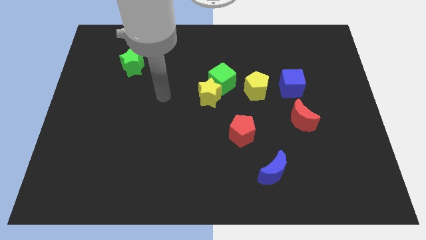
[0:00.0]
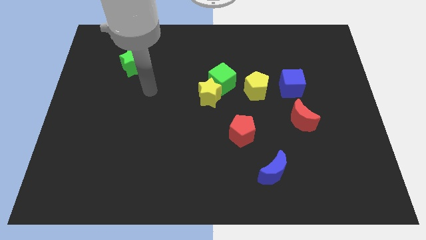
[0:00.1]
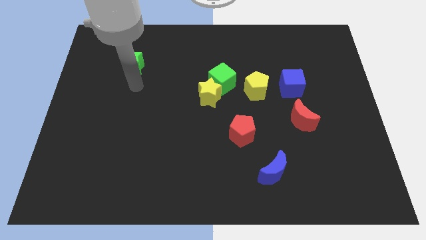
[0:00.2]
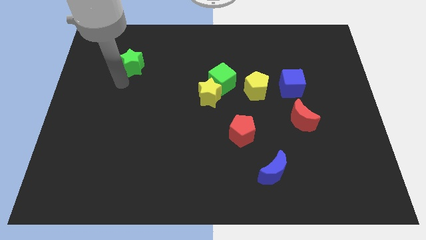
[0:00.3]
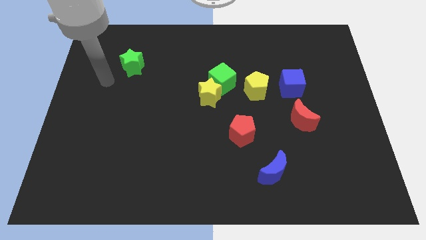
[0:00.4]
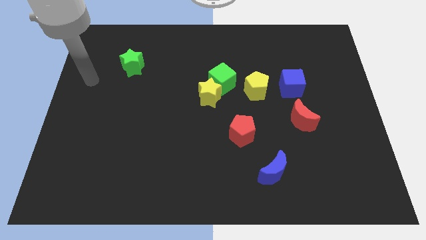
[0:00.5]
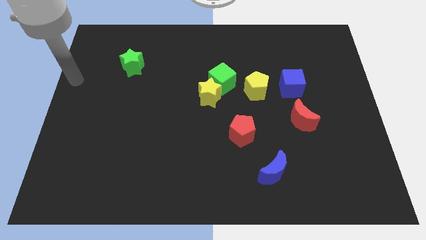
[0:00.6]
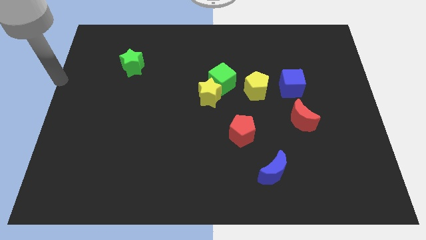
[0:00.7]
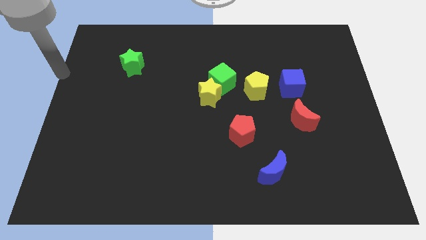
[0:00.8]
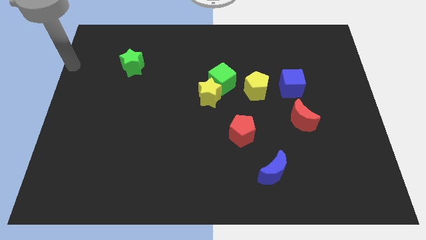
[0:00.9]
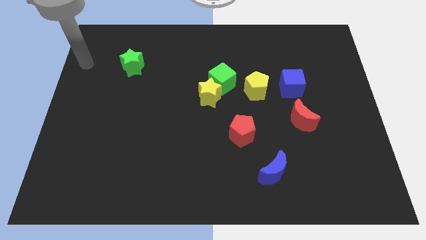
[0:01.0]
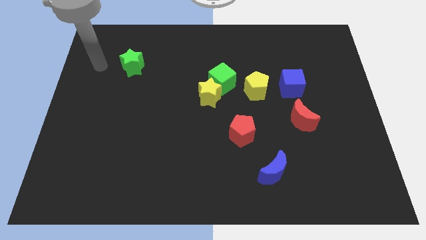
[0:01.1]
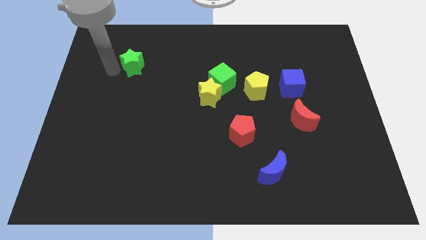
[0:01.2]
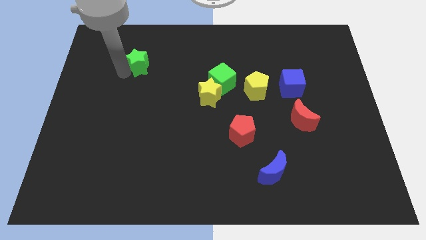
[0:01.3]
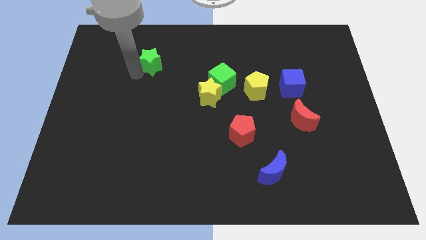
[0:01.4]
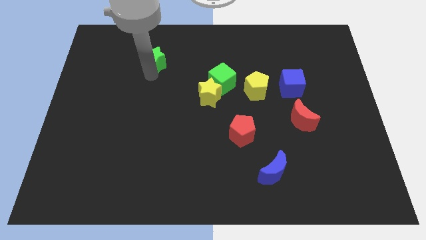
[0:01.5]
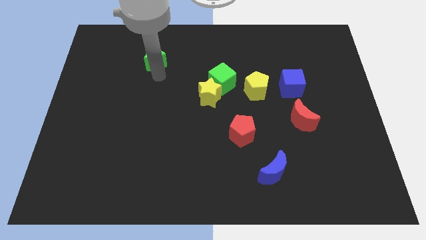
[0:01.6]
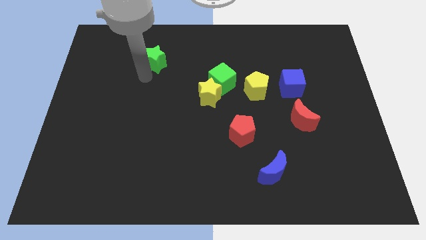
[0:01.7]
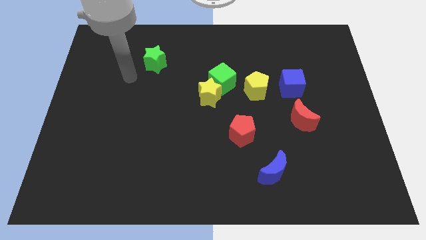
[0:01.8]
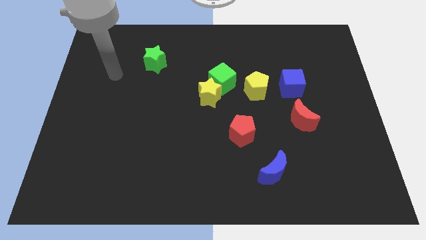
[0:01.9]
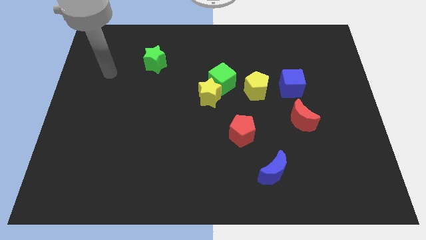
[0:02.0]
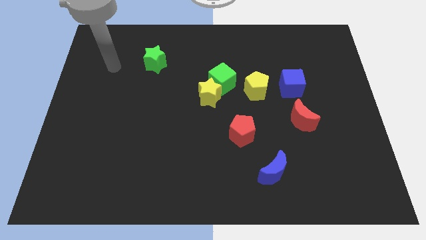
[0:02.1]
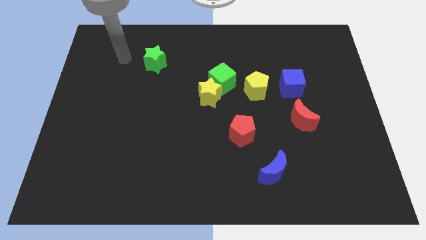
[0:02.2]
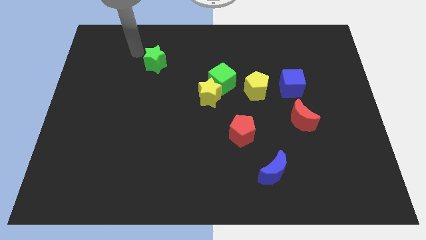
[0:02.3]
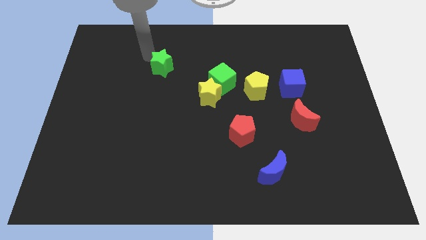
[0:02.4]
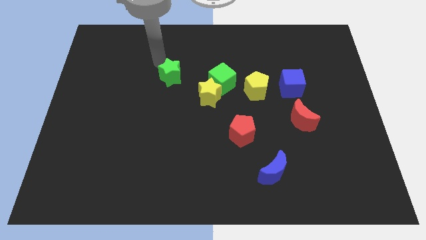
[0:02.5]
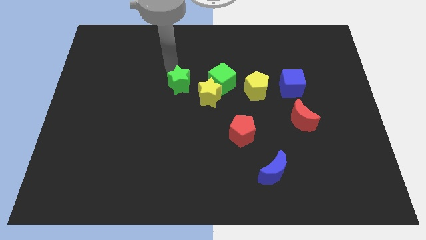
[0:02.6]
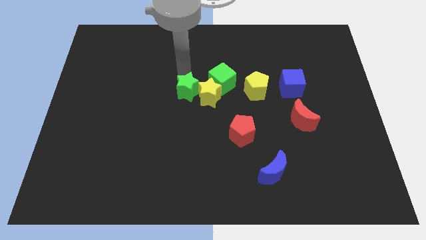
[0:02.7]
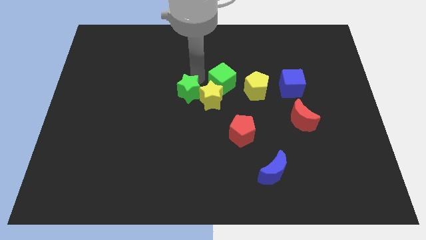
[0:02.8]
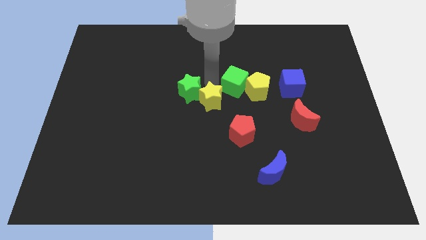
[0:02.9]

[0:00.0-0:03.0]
place the green star diagonal top left to yellow star

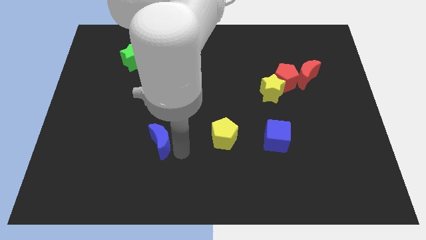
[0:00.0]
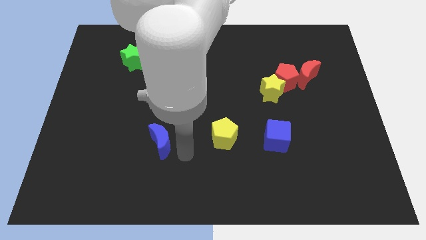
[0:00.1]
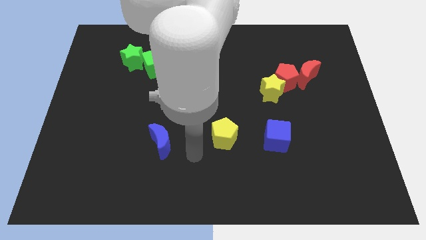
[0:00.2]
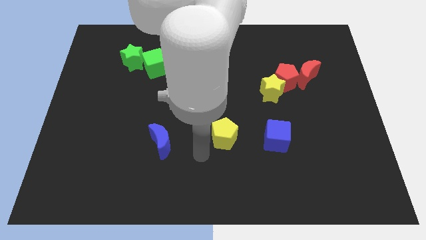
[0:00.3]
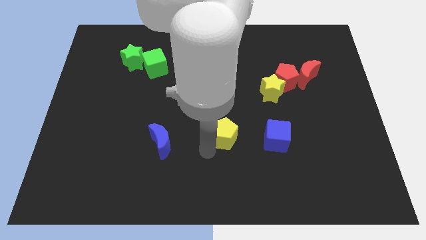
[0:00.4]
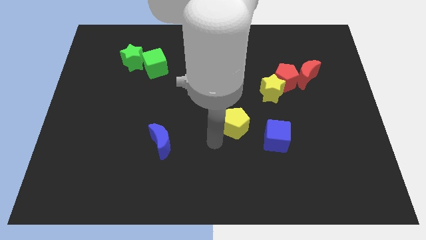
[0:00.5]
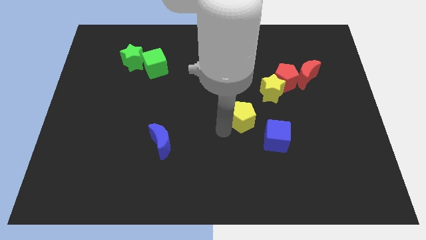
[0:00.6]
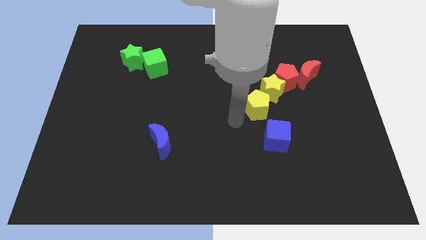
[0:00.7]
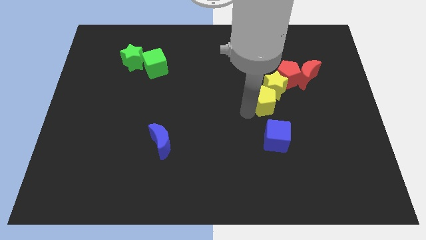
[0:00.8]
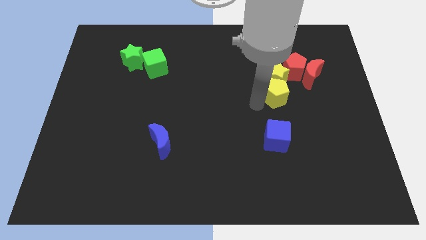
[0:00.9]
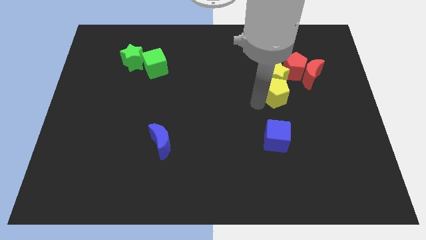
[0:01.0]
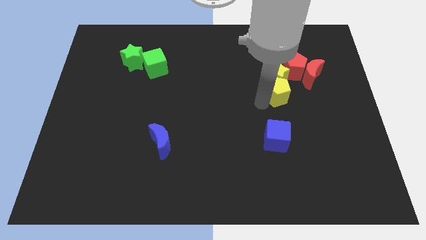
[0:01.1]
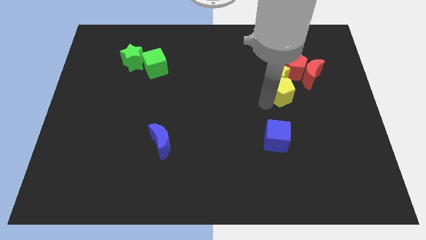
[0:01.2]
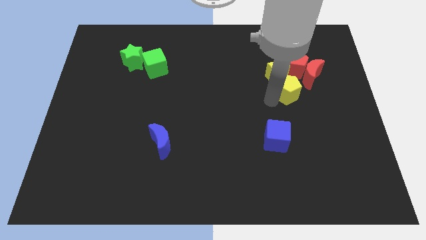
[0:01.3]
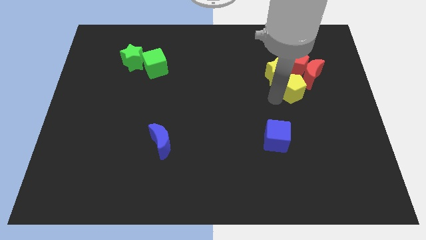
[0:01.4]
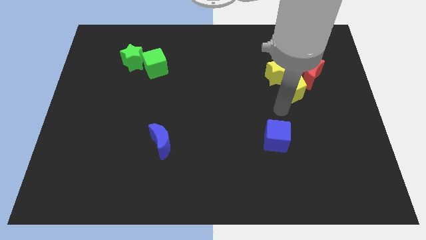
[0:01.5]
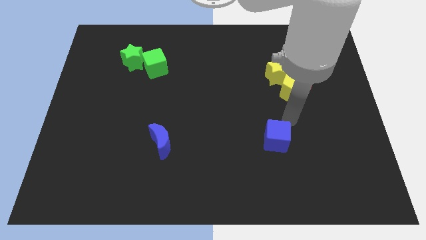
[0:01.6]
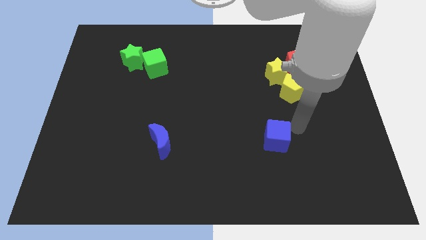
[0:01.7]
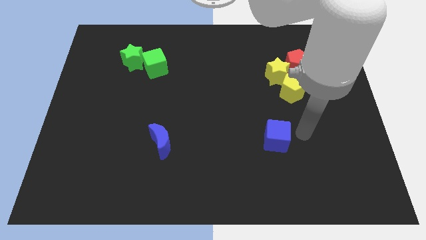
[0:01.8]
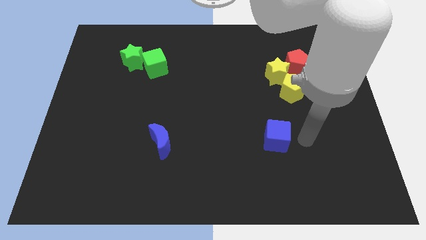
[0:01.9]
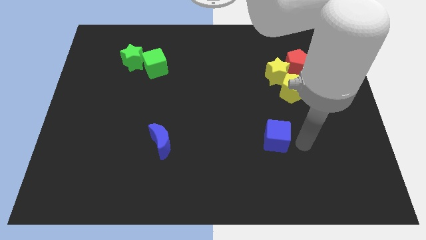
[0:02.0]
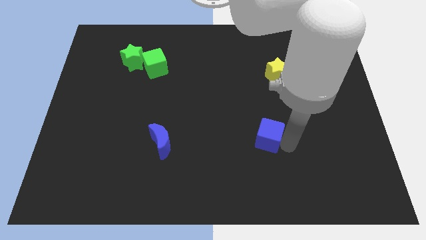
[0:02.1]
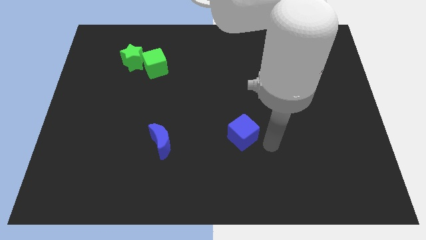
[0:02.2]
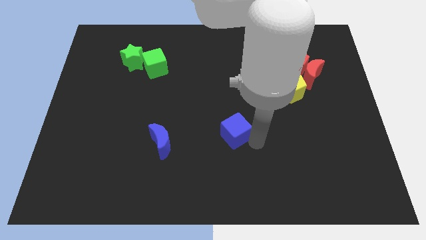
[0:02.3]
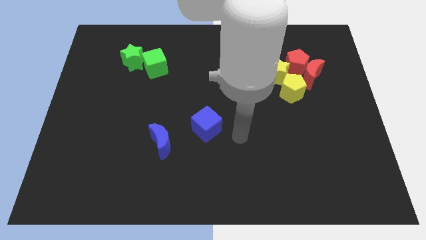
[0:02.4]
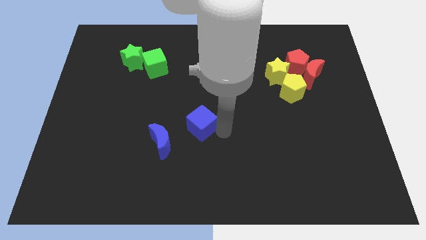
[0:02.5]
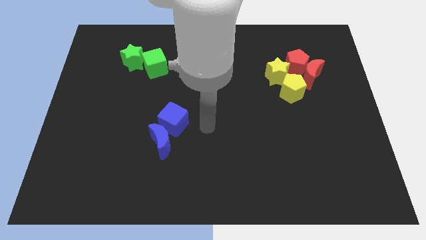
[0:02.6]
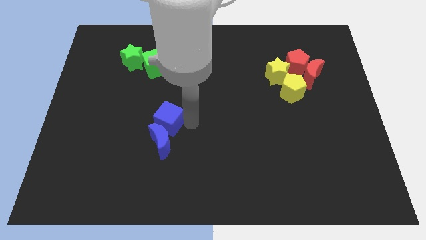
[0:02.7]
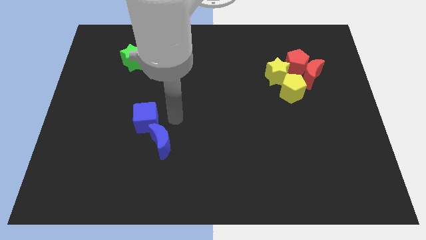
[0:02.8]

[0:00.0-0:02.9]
push the yellow pentagon and place it close to the yellow star

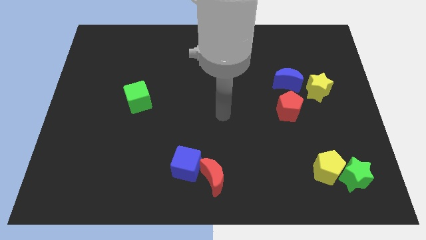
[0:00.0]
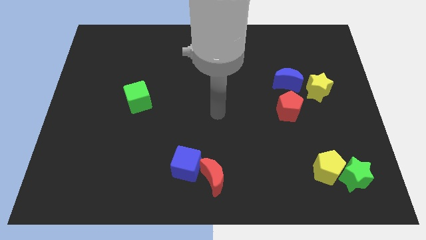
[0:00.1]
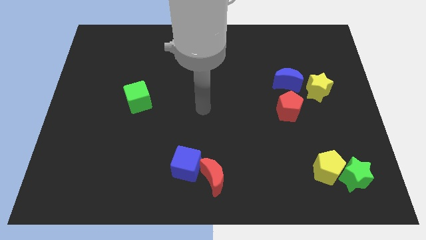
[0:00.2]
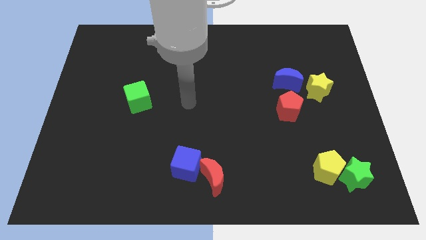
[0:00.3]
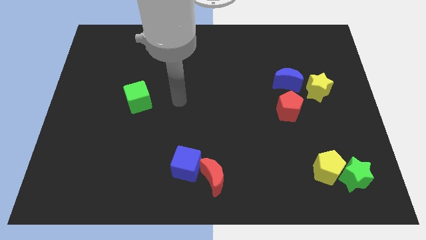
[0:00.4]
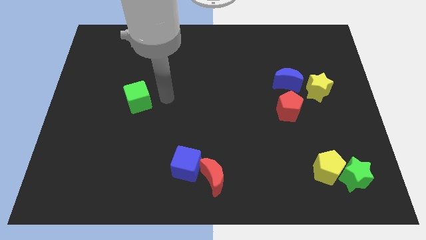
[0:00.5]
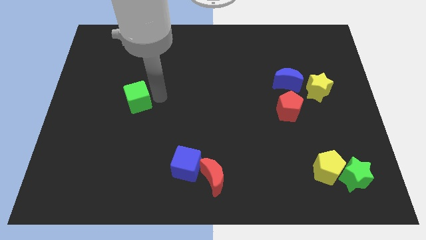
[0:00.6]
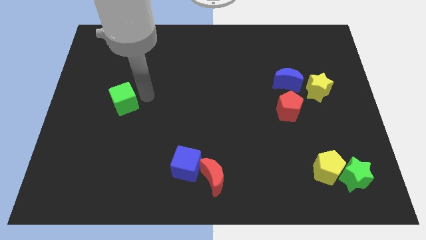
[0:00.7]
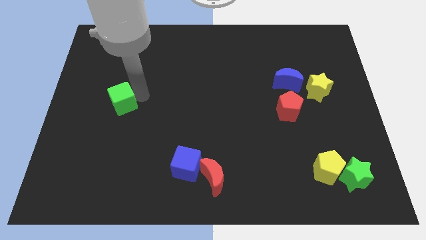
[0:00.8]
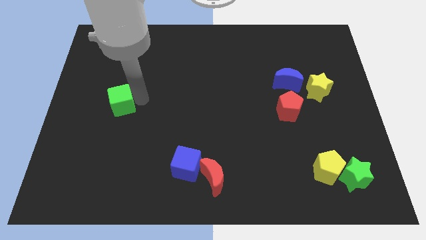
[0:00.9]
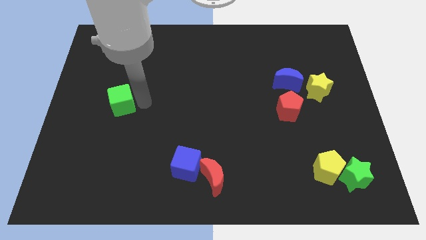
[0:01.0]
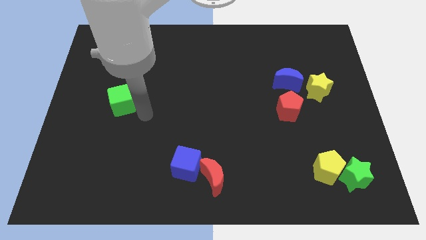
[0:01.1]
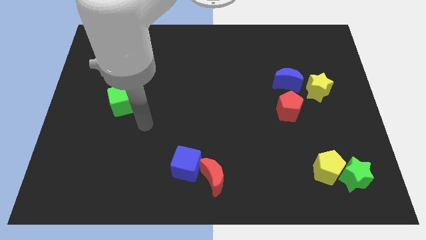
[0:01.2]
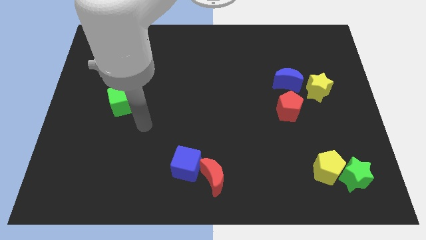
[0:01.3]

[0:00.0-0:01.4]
touch the green cube

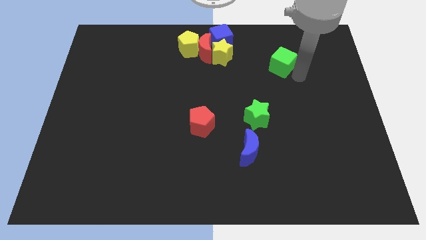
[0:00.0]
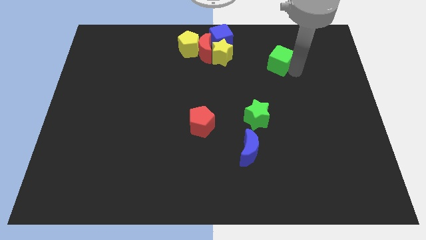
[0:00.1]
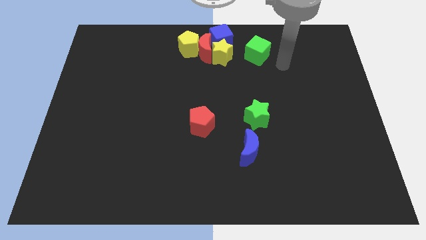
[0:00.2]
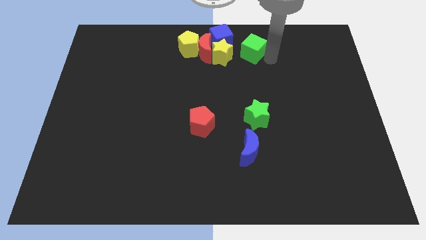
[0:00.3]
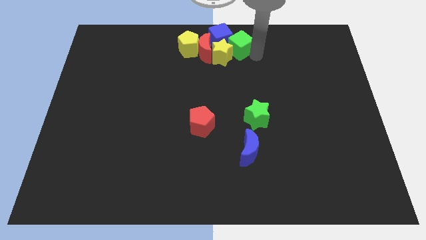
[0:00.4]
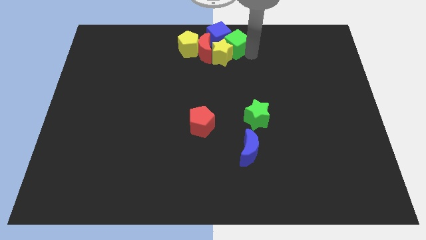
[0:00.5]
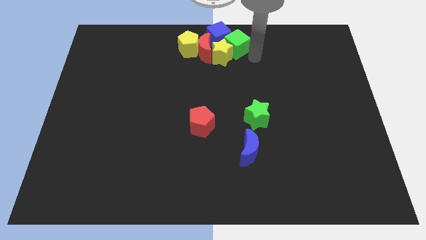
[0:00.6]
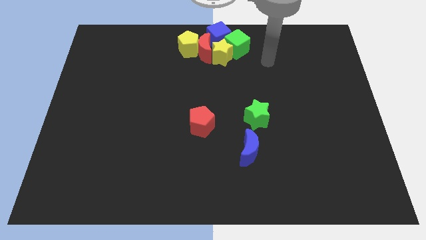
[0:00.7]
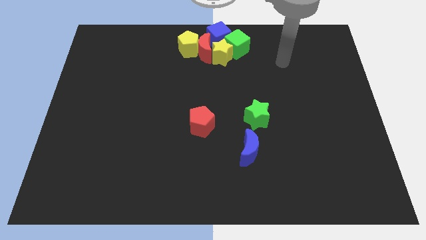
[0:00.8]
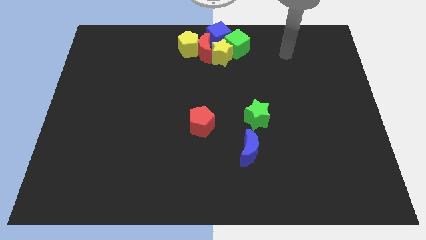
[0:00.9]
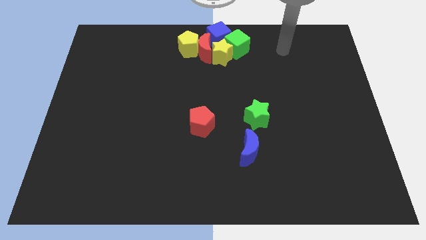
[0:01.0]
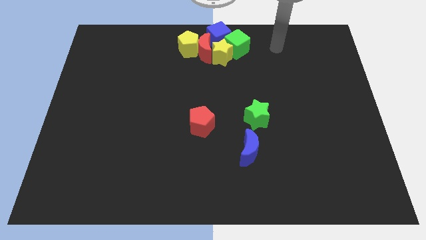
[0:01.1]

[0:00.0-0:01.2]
move the green cube towards the top center of the board

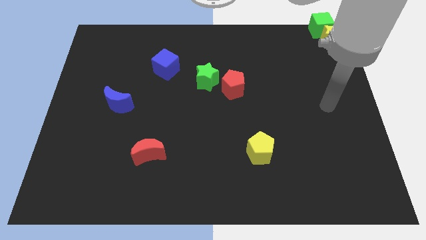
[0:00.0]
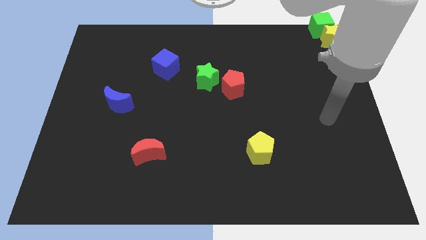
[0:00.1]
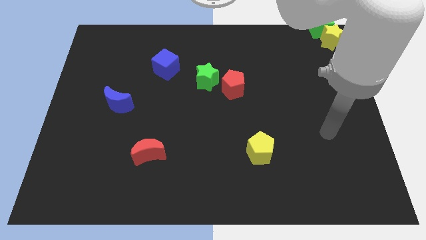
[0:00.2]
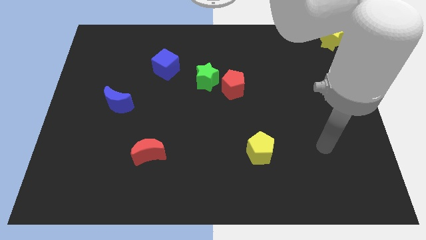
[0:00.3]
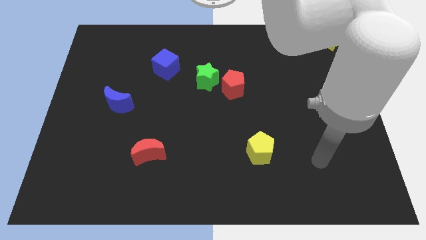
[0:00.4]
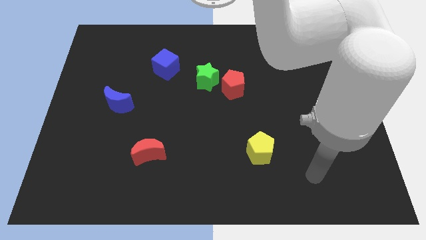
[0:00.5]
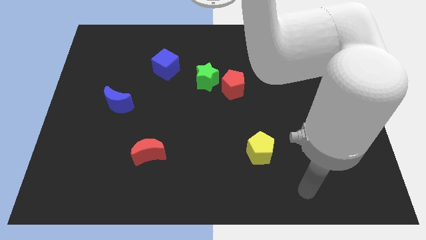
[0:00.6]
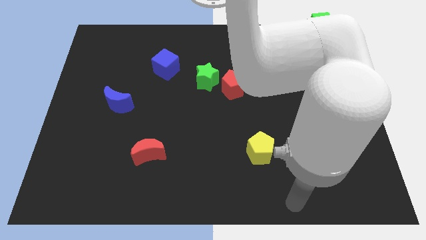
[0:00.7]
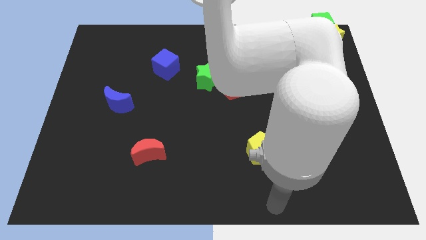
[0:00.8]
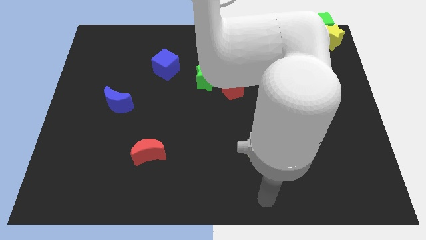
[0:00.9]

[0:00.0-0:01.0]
move the arm below the yellow cresecnt
